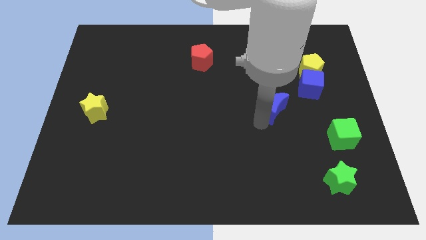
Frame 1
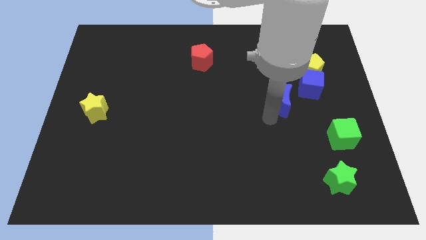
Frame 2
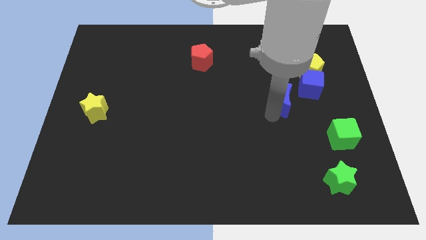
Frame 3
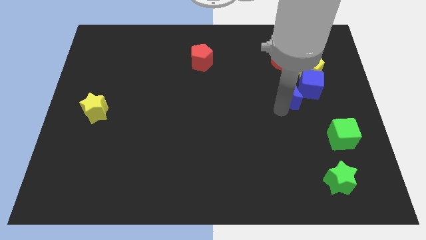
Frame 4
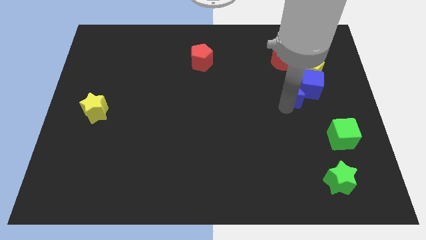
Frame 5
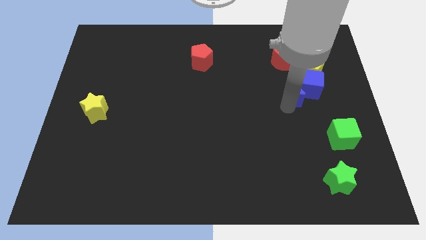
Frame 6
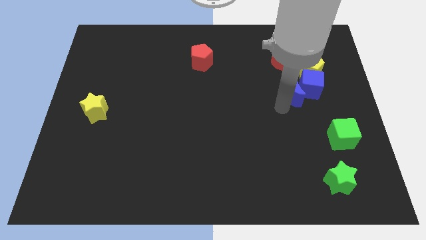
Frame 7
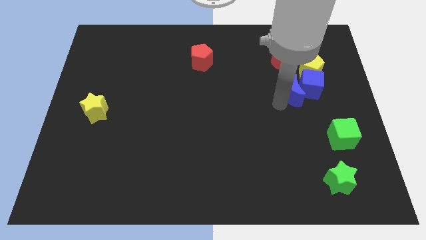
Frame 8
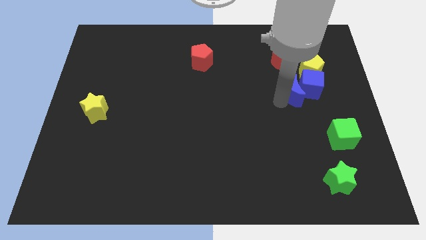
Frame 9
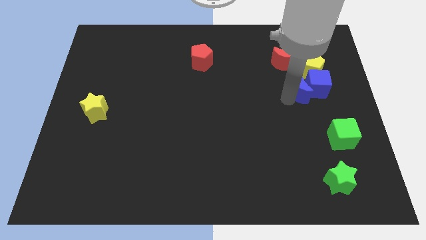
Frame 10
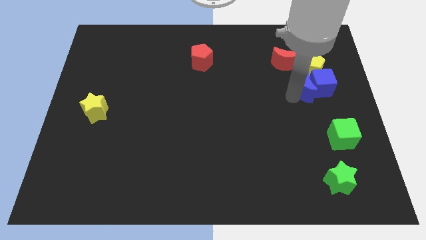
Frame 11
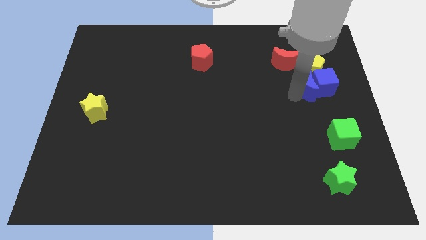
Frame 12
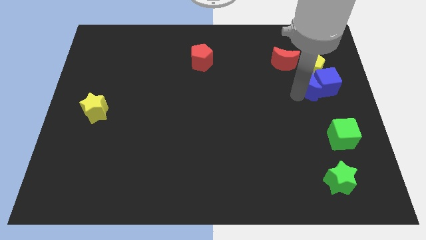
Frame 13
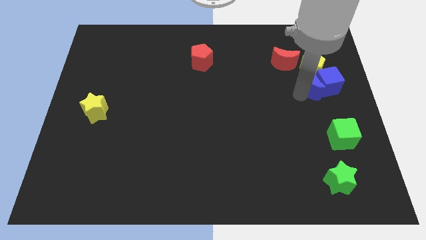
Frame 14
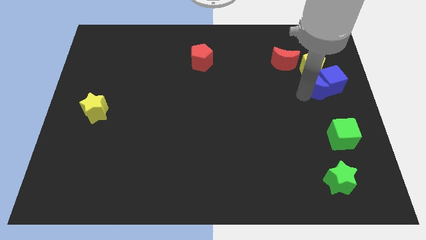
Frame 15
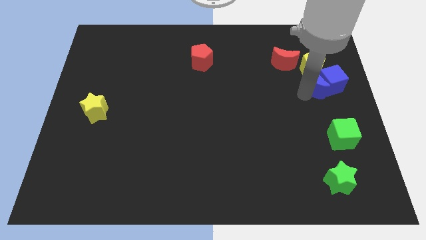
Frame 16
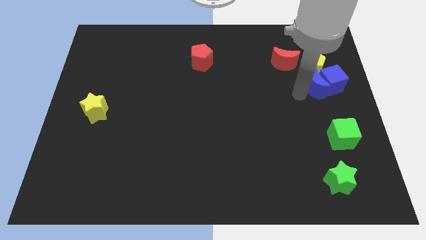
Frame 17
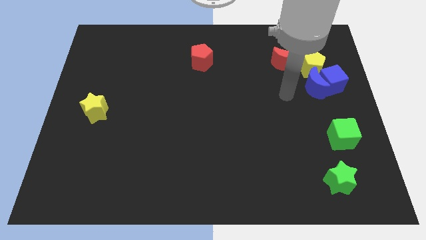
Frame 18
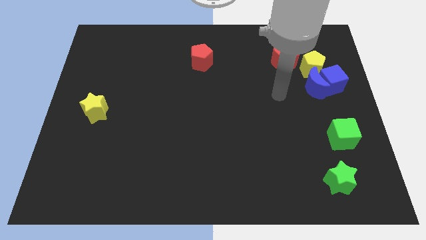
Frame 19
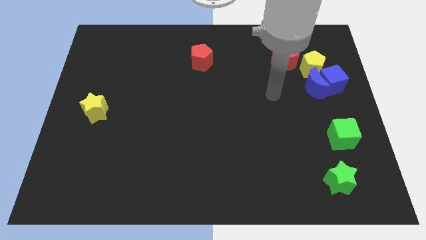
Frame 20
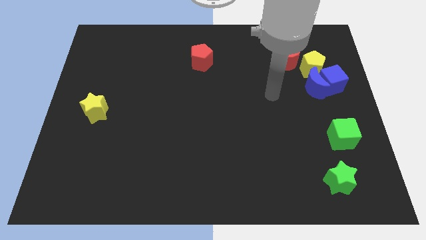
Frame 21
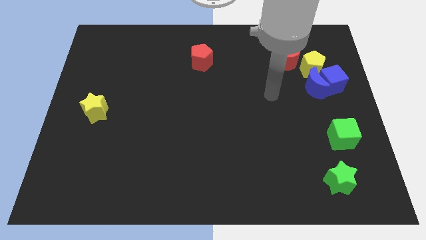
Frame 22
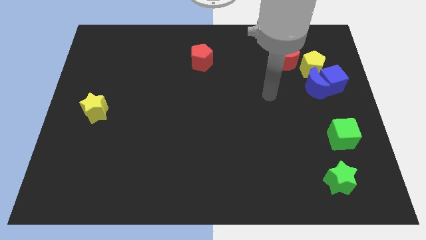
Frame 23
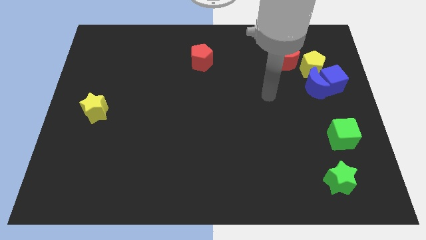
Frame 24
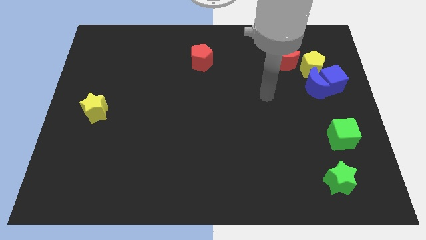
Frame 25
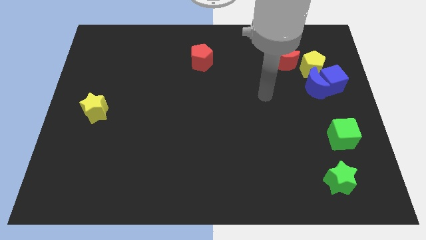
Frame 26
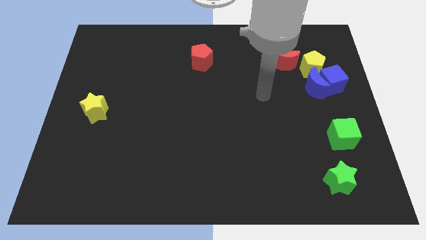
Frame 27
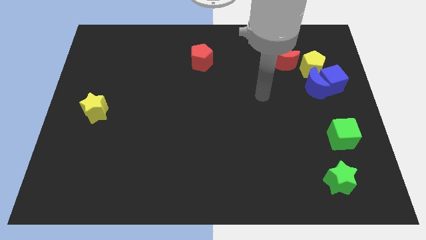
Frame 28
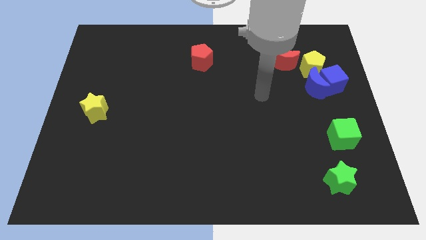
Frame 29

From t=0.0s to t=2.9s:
push the blue blocks together to the bottom of the yellow pentagon

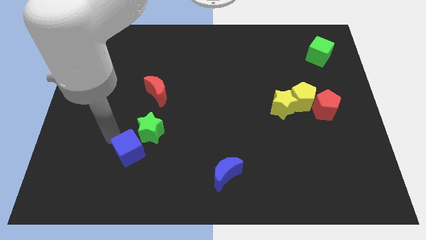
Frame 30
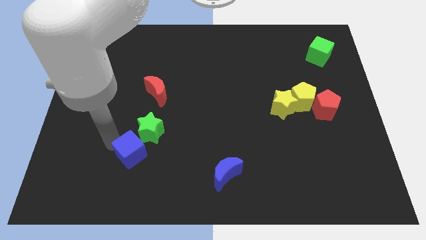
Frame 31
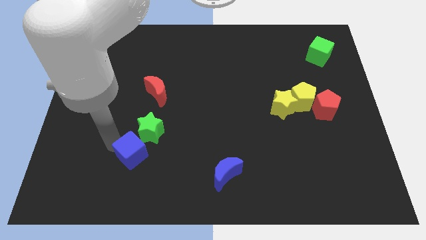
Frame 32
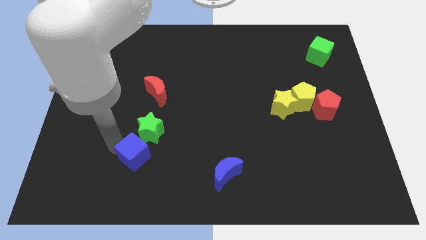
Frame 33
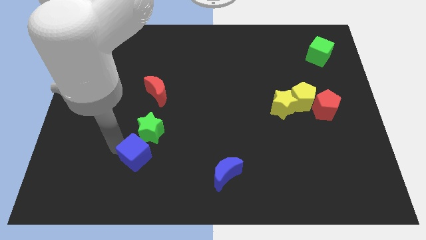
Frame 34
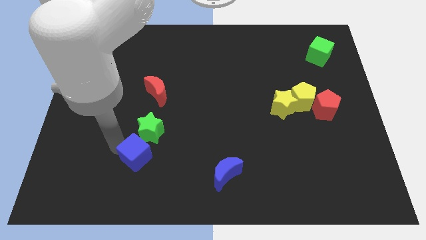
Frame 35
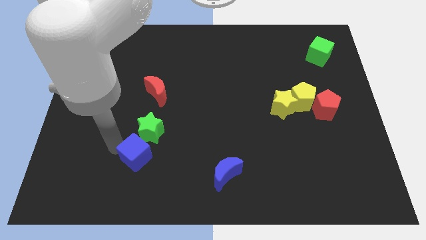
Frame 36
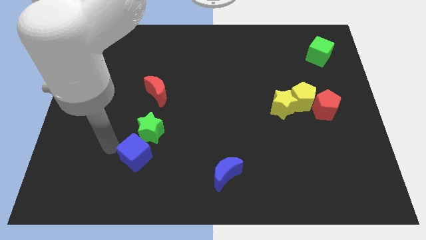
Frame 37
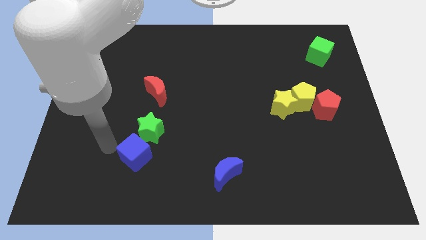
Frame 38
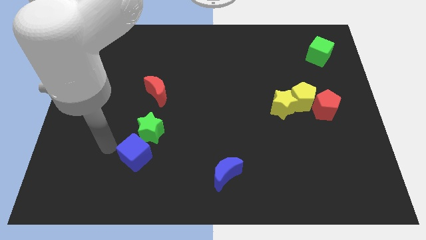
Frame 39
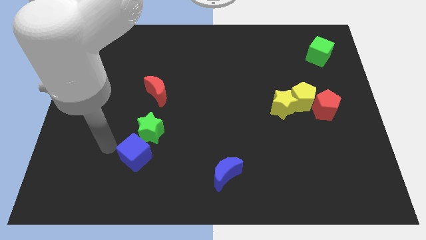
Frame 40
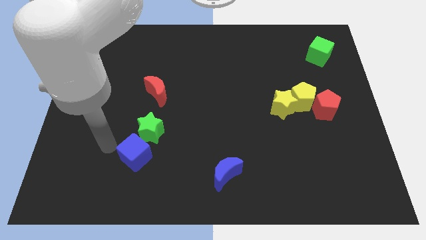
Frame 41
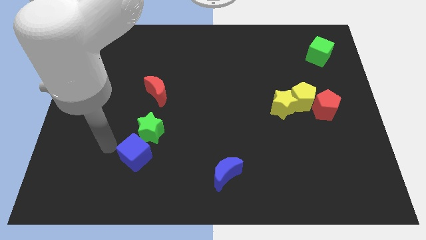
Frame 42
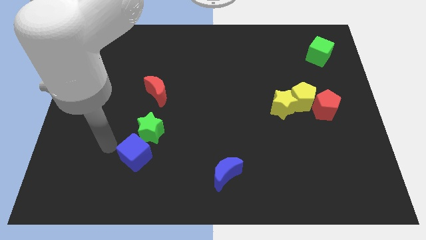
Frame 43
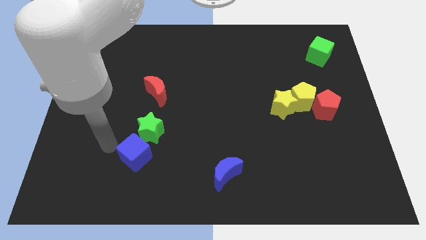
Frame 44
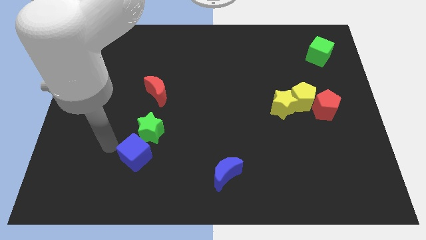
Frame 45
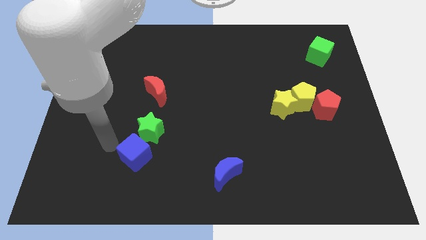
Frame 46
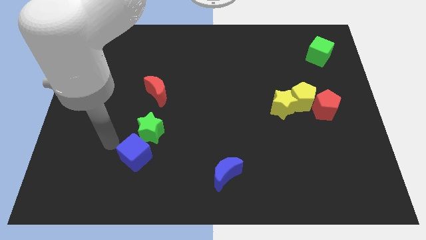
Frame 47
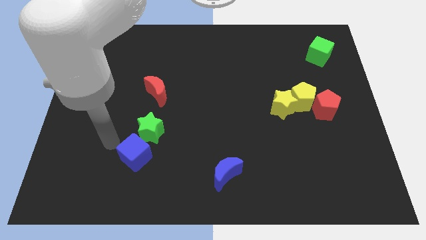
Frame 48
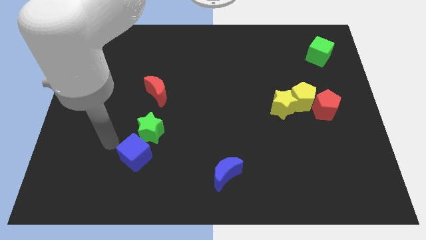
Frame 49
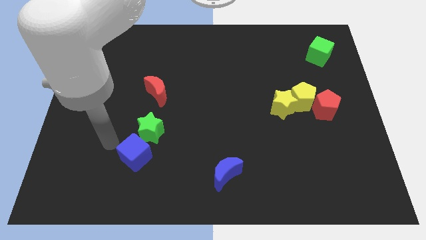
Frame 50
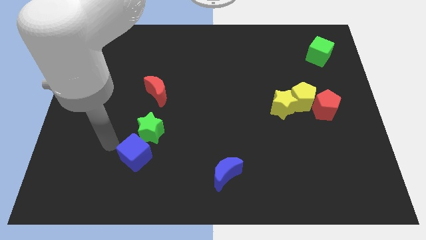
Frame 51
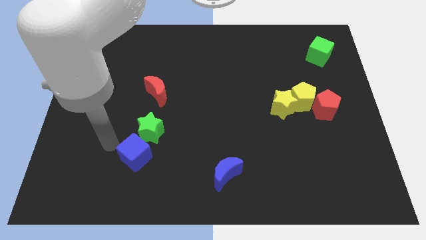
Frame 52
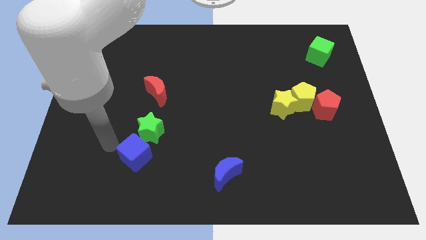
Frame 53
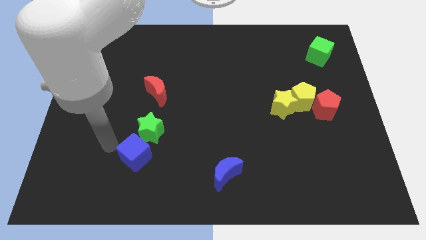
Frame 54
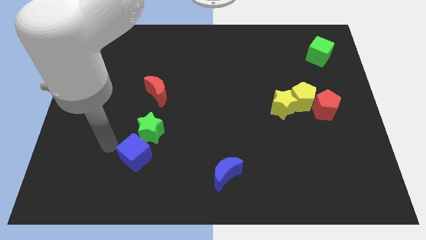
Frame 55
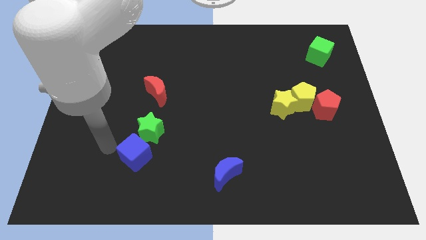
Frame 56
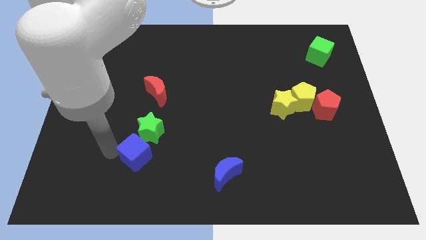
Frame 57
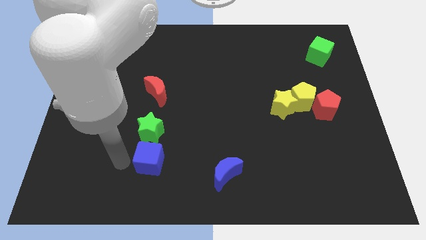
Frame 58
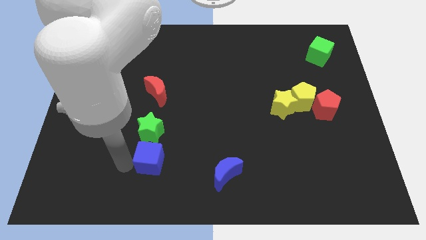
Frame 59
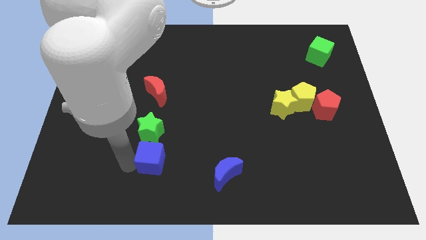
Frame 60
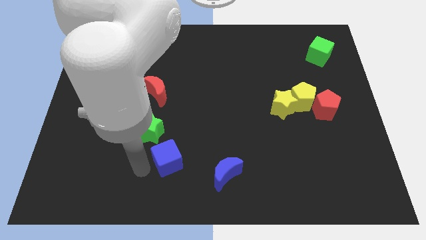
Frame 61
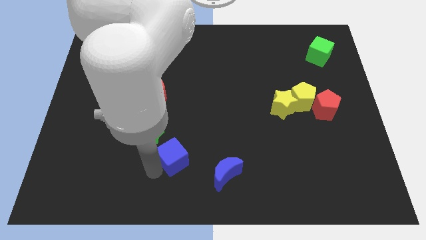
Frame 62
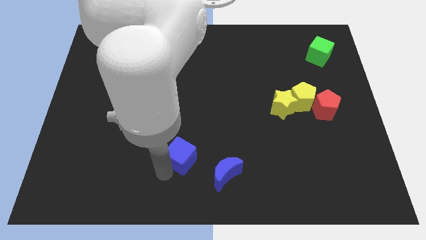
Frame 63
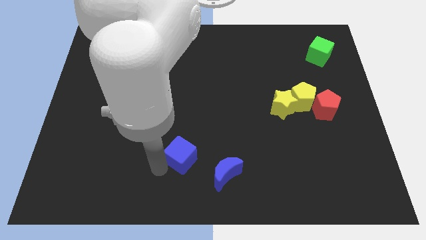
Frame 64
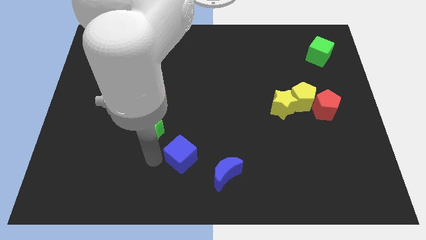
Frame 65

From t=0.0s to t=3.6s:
place the blue cube towards left of blue moon

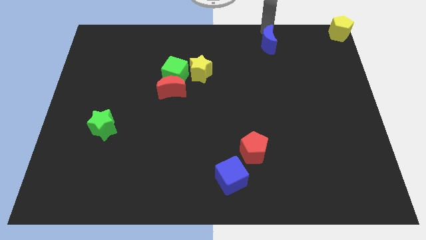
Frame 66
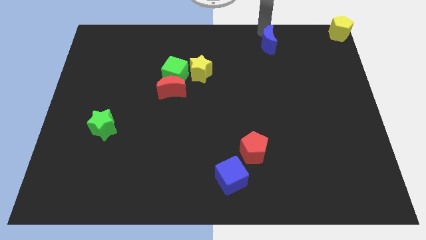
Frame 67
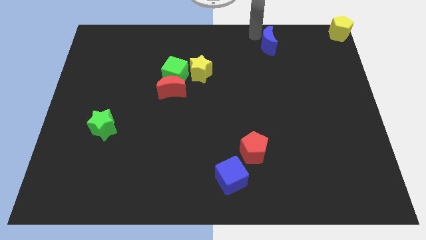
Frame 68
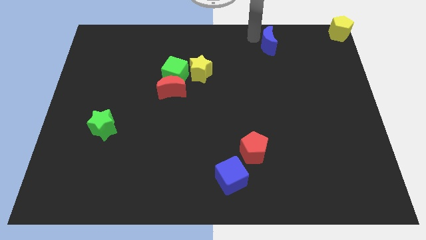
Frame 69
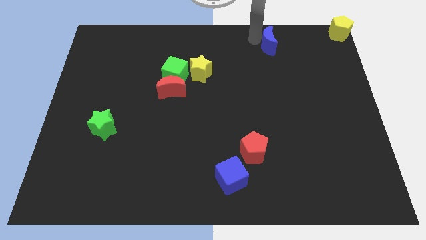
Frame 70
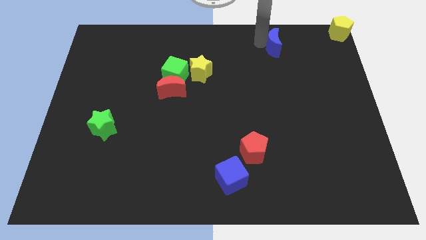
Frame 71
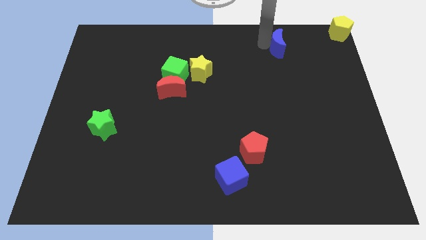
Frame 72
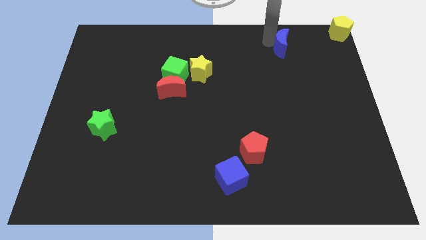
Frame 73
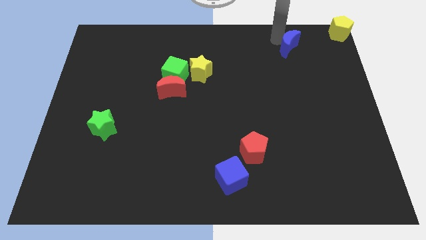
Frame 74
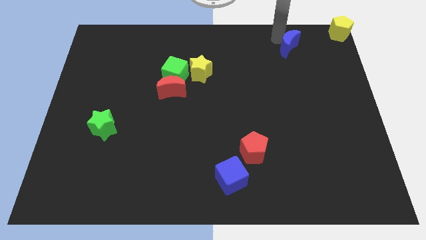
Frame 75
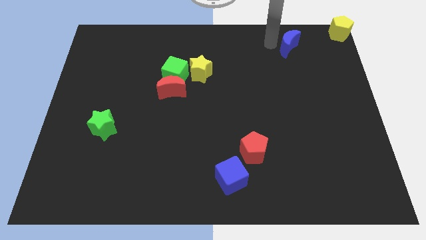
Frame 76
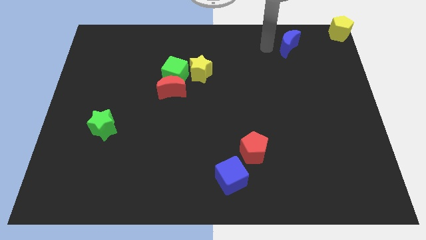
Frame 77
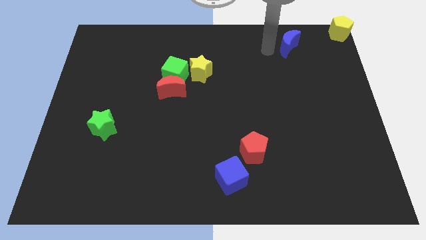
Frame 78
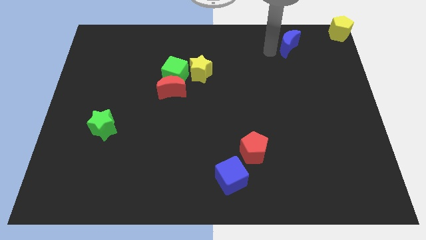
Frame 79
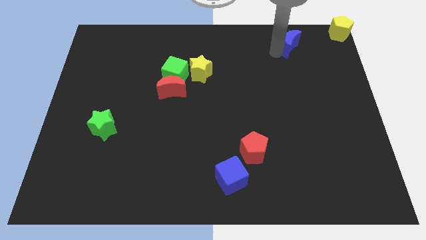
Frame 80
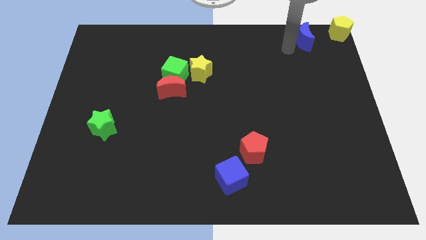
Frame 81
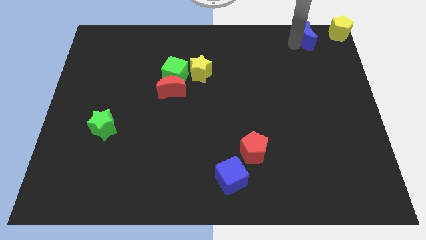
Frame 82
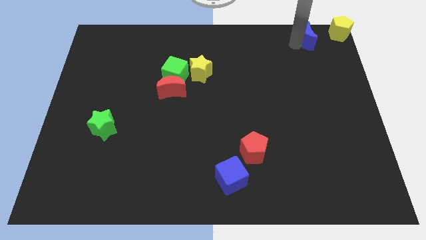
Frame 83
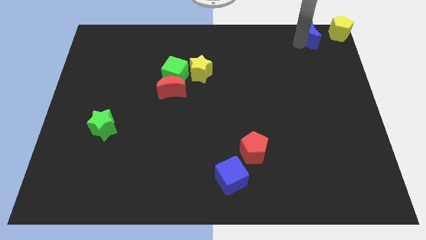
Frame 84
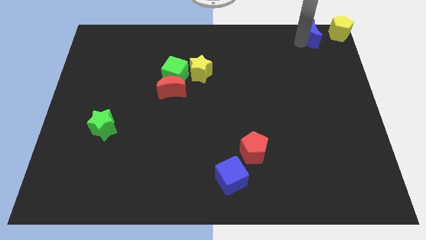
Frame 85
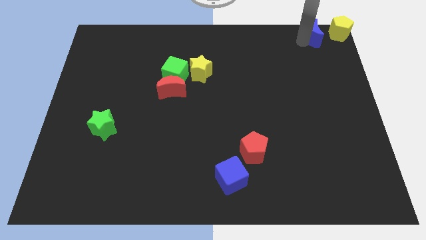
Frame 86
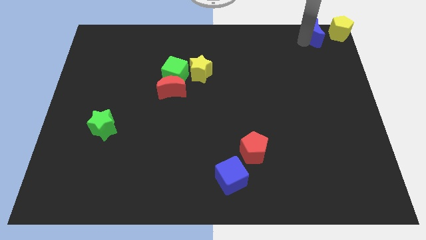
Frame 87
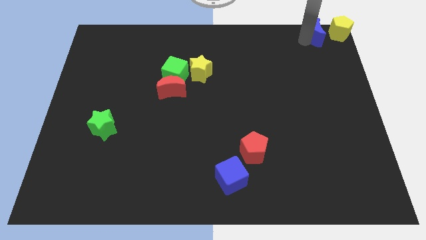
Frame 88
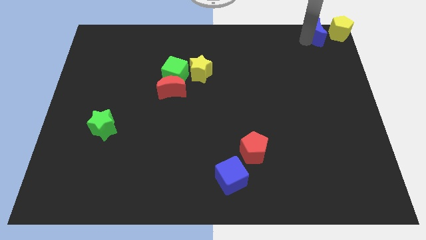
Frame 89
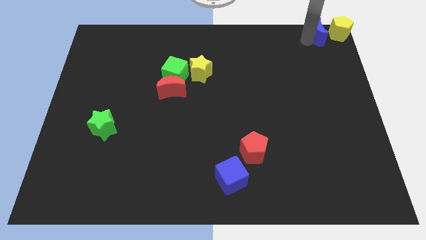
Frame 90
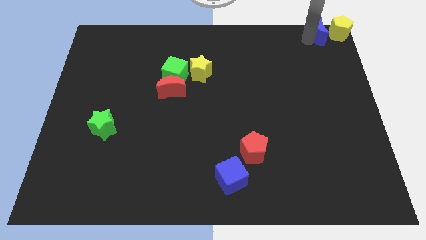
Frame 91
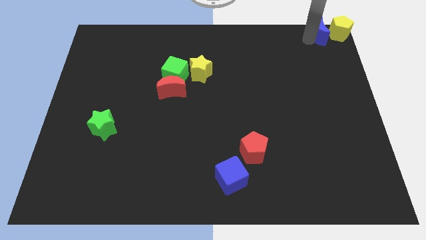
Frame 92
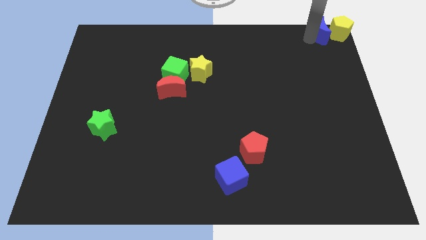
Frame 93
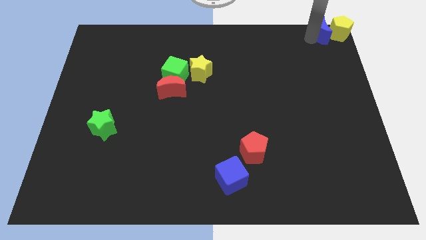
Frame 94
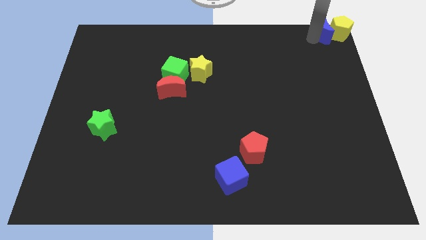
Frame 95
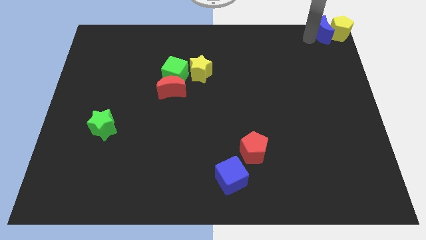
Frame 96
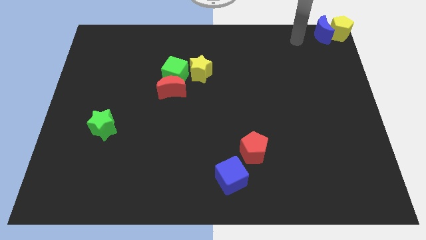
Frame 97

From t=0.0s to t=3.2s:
move the blue moon to the left side of the yellow pentagon
